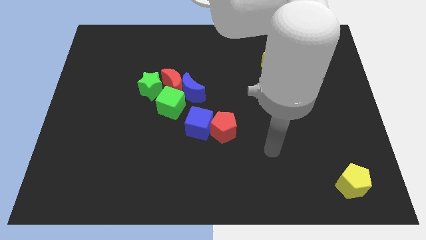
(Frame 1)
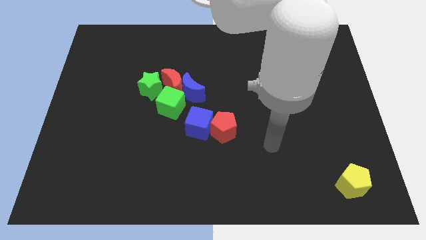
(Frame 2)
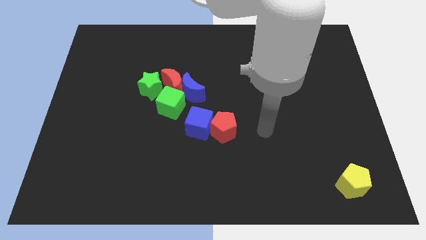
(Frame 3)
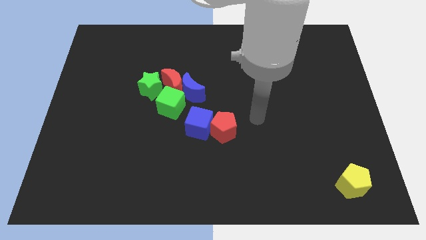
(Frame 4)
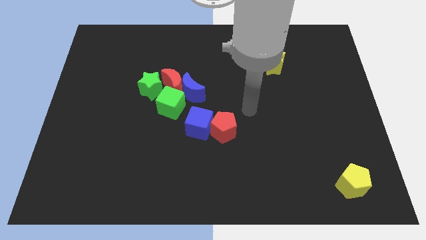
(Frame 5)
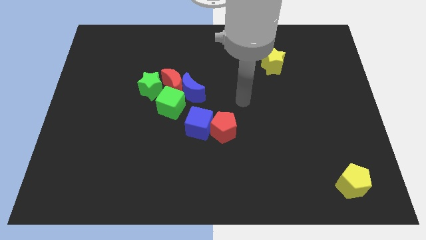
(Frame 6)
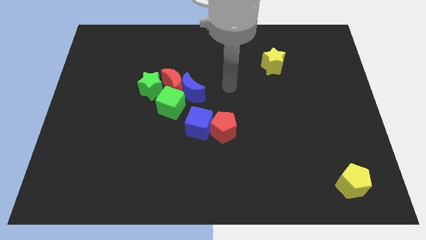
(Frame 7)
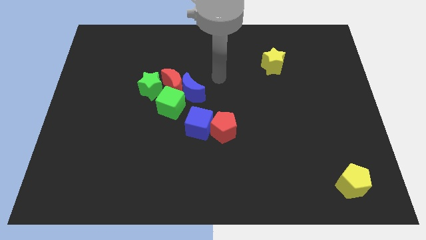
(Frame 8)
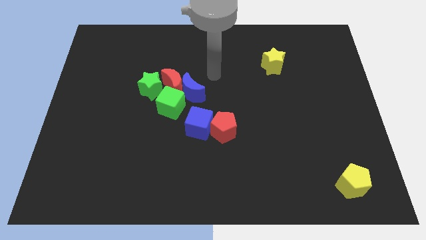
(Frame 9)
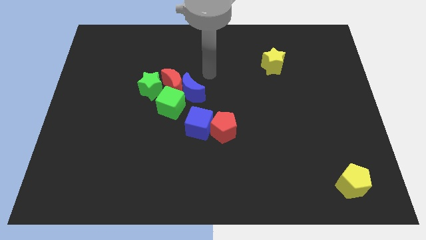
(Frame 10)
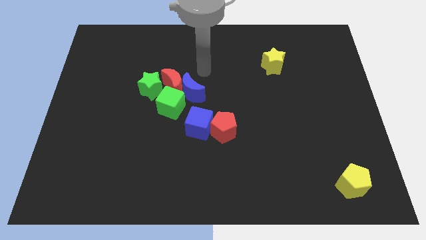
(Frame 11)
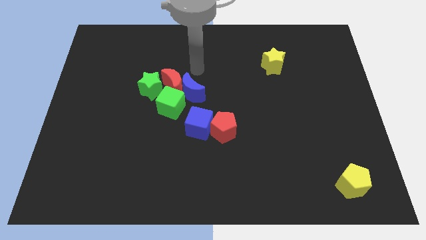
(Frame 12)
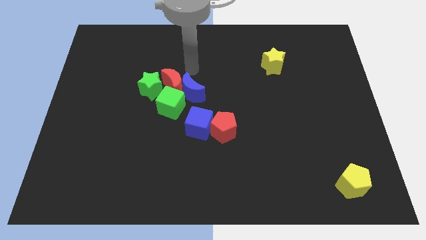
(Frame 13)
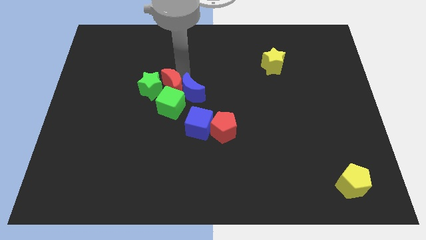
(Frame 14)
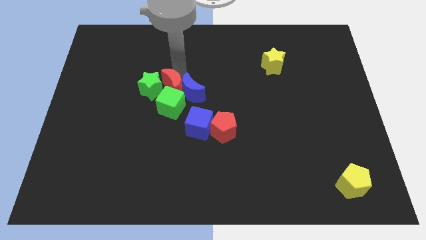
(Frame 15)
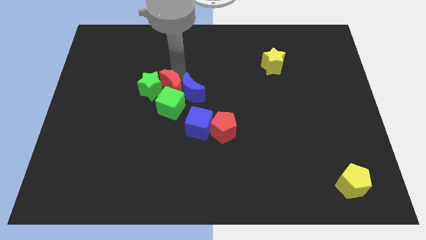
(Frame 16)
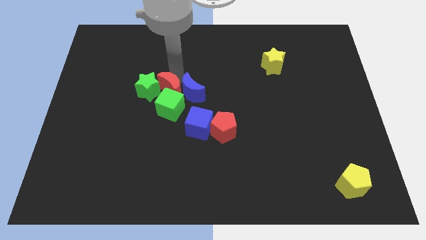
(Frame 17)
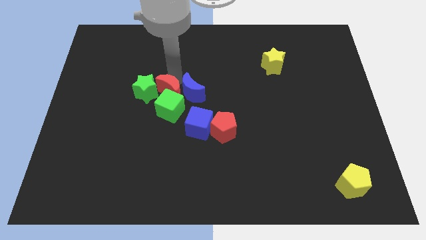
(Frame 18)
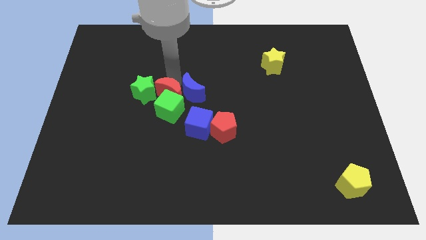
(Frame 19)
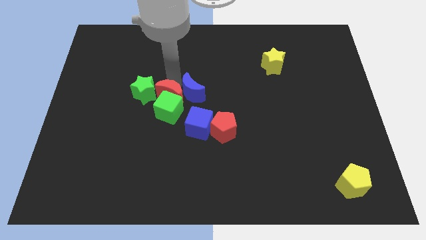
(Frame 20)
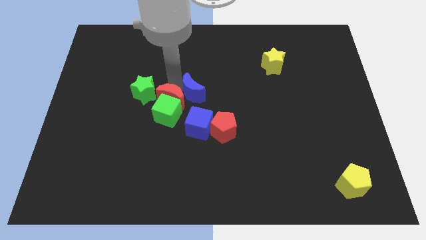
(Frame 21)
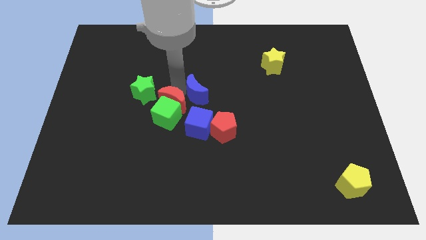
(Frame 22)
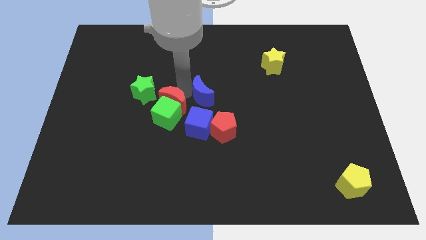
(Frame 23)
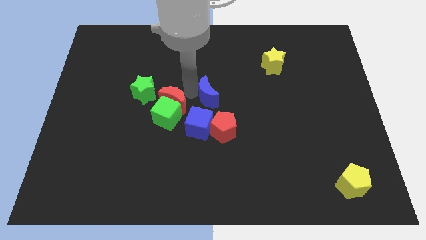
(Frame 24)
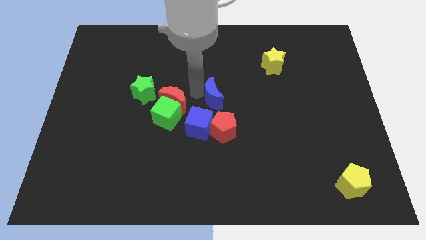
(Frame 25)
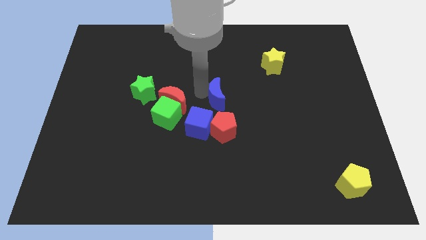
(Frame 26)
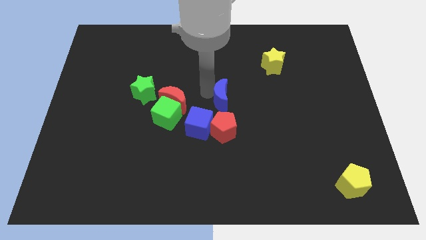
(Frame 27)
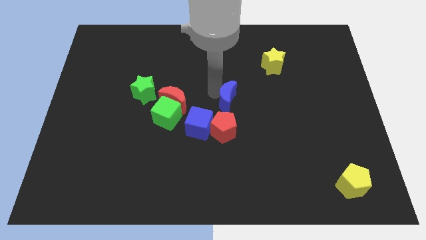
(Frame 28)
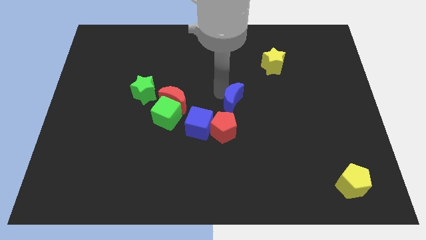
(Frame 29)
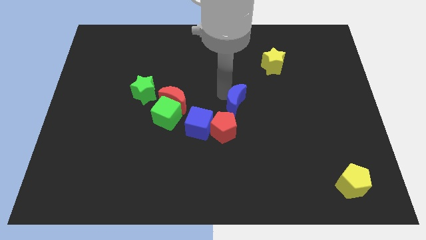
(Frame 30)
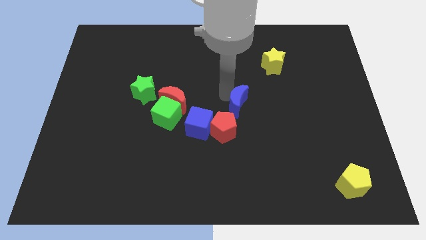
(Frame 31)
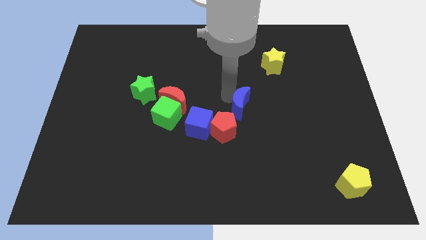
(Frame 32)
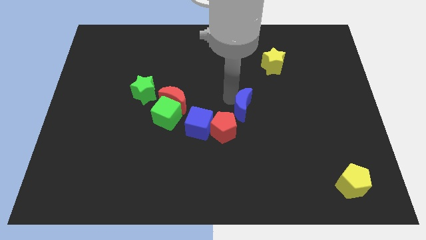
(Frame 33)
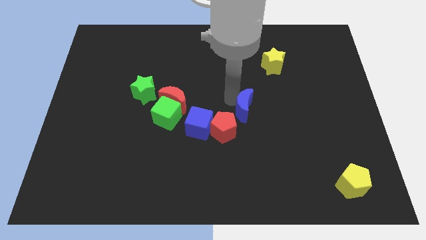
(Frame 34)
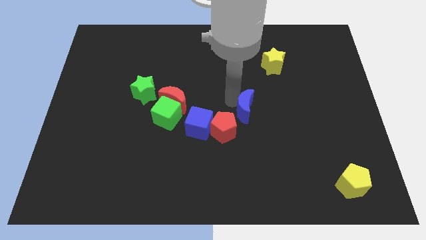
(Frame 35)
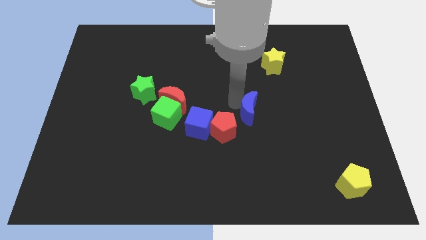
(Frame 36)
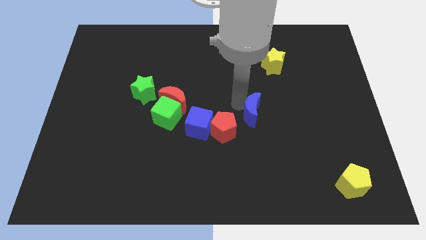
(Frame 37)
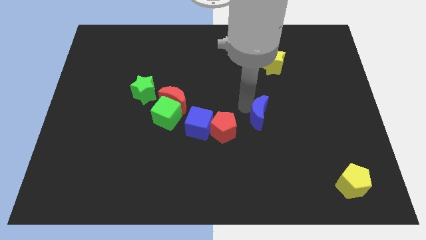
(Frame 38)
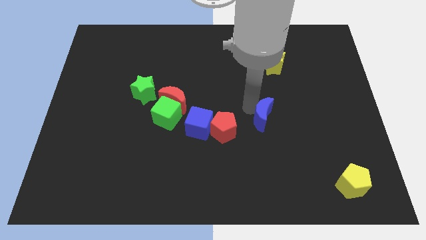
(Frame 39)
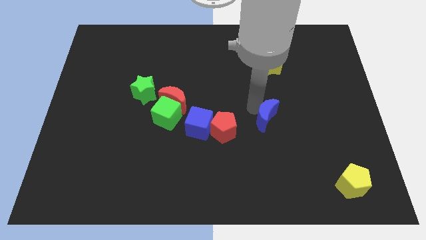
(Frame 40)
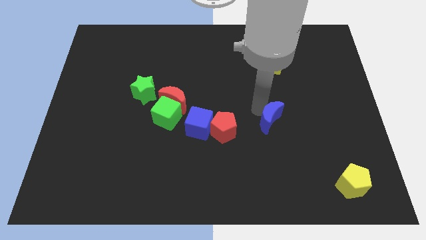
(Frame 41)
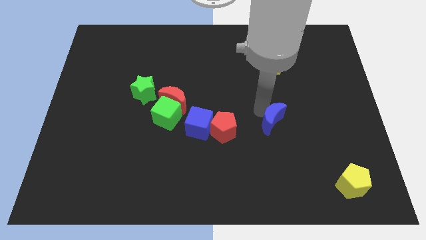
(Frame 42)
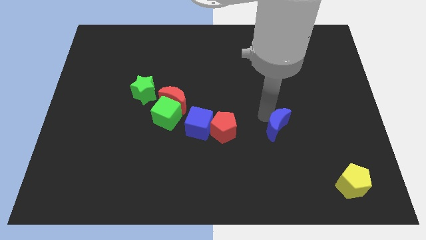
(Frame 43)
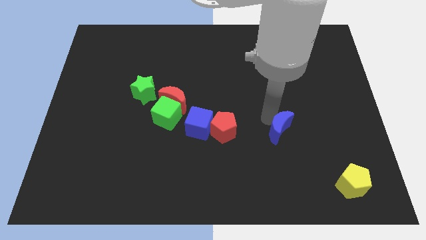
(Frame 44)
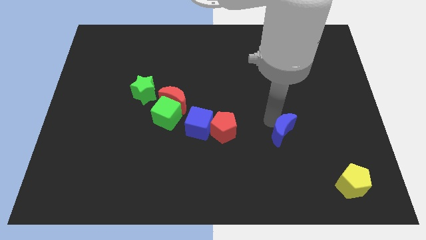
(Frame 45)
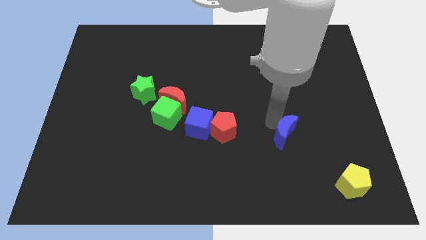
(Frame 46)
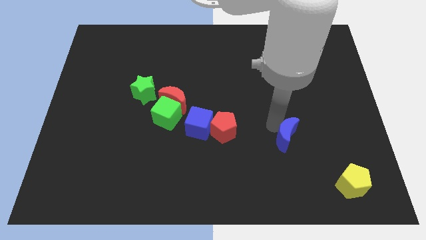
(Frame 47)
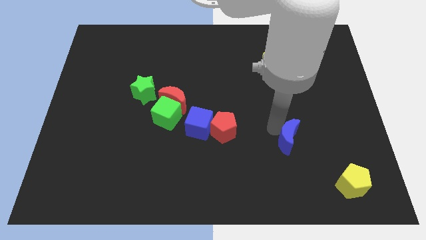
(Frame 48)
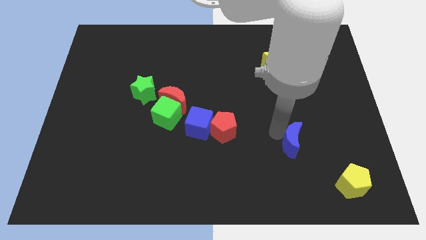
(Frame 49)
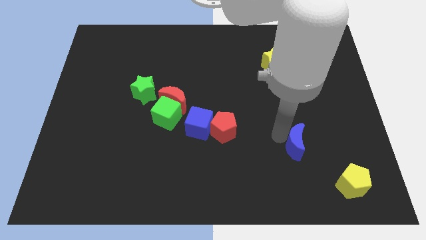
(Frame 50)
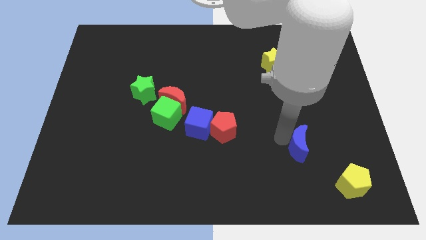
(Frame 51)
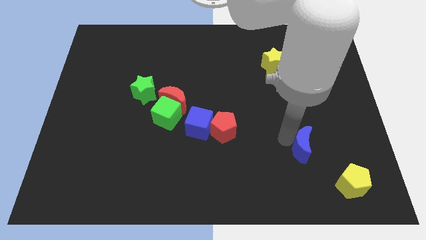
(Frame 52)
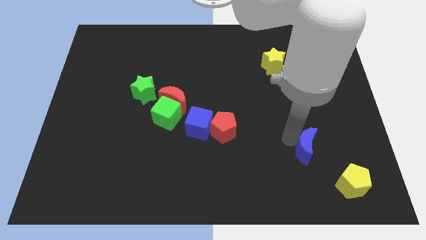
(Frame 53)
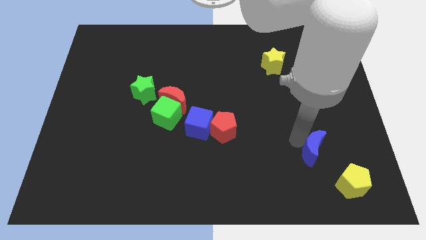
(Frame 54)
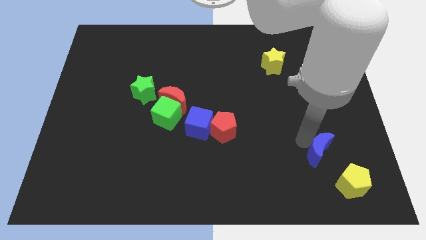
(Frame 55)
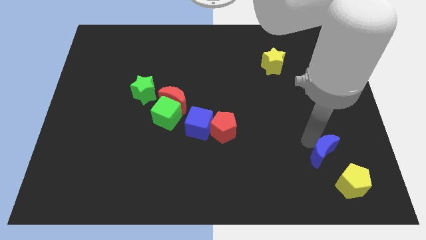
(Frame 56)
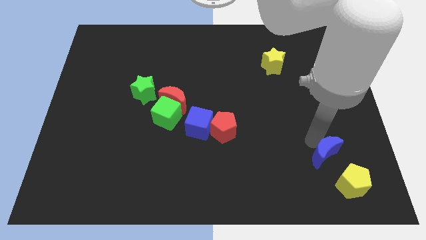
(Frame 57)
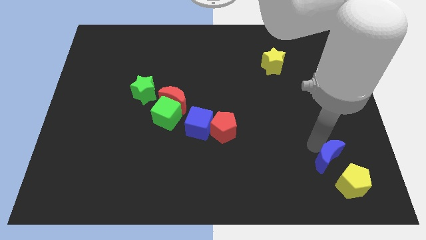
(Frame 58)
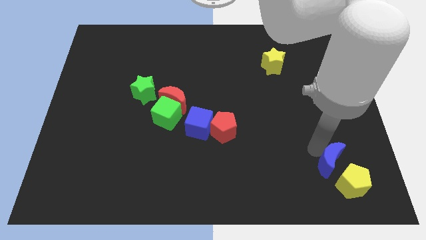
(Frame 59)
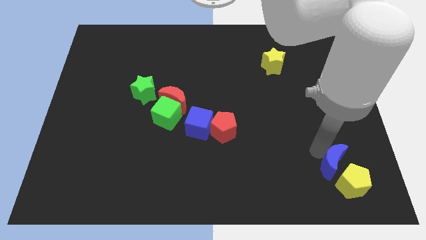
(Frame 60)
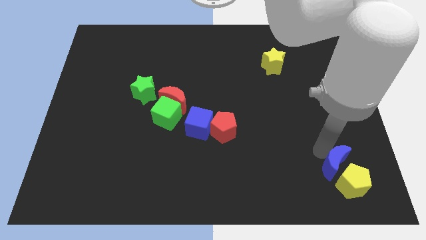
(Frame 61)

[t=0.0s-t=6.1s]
push the blue moon to the yellow pentagon

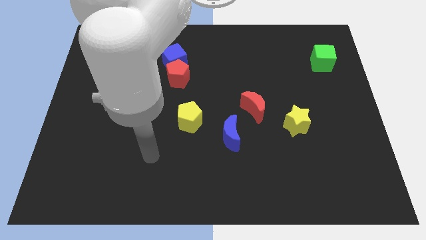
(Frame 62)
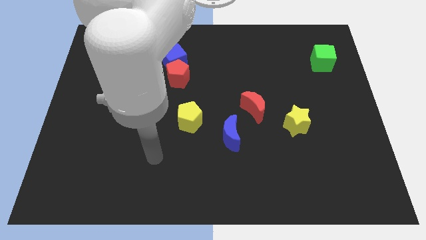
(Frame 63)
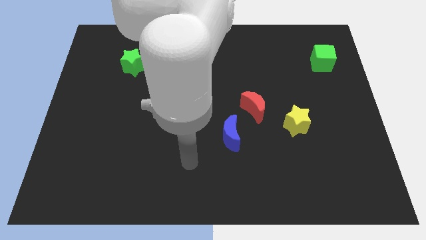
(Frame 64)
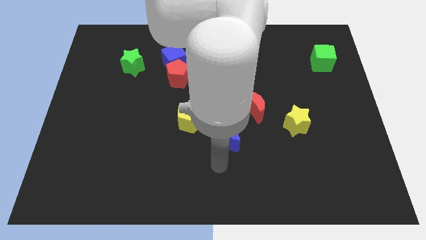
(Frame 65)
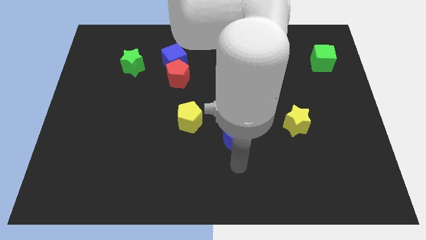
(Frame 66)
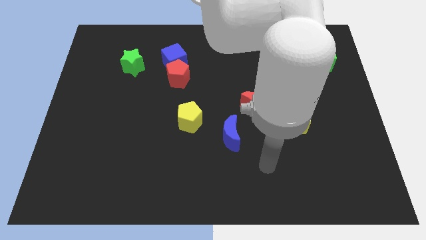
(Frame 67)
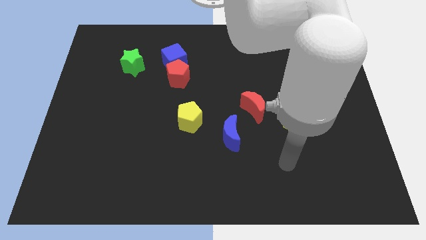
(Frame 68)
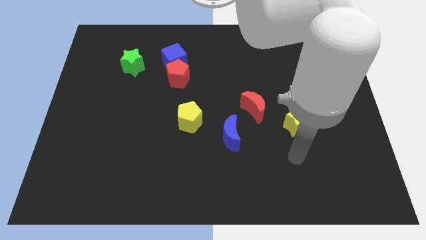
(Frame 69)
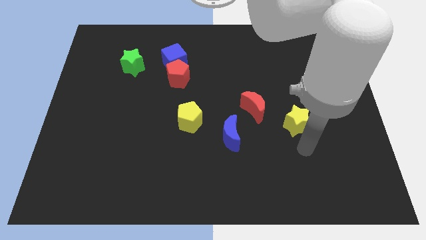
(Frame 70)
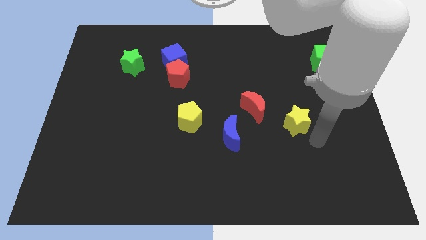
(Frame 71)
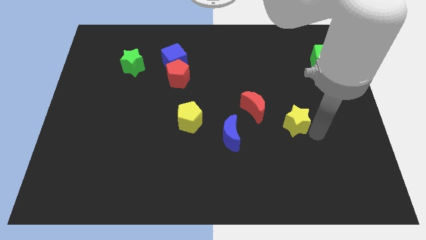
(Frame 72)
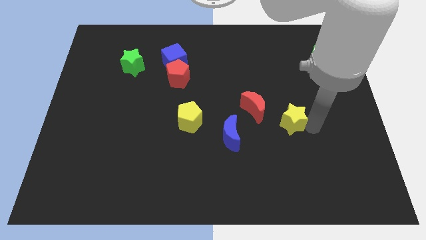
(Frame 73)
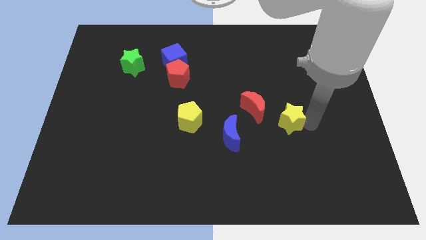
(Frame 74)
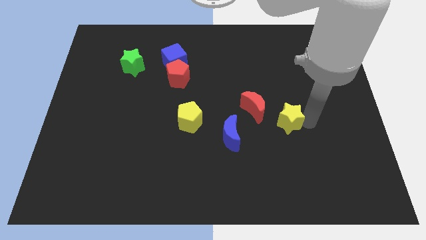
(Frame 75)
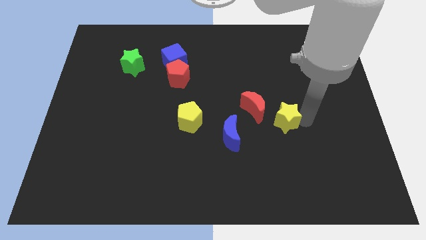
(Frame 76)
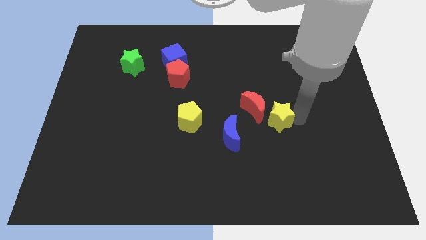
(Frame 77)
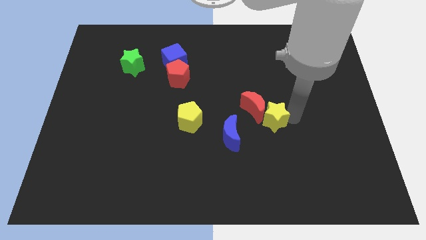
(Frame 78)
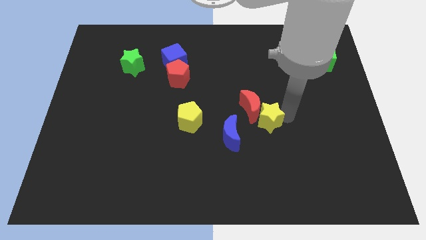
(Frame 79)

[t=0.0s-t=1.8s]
move the yellow star next to the red moon

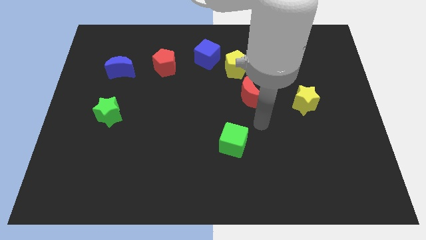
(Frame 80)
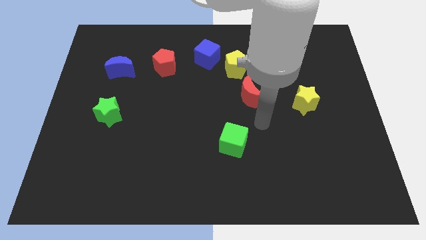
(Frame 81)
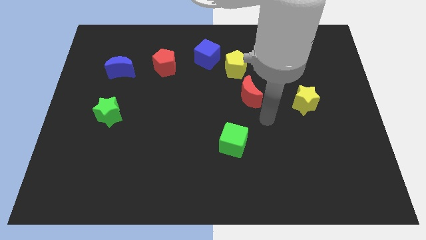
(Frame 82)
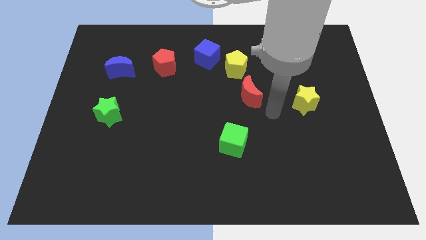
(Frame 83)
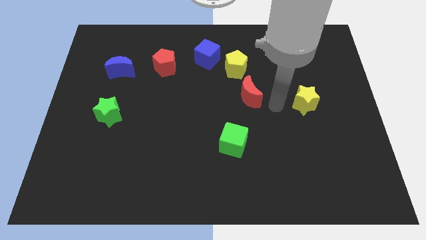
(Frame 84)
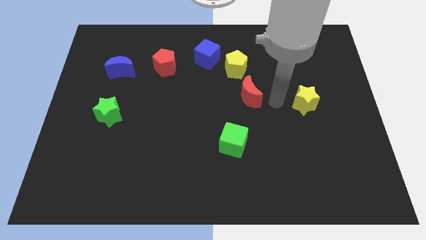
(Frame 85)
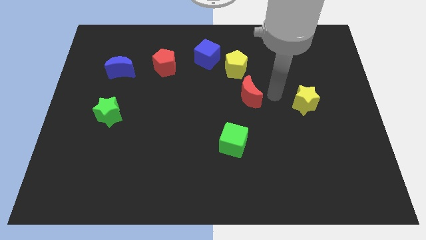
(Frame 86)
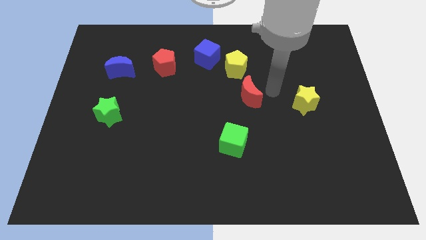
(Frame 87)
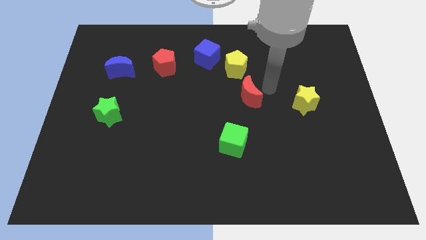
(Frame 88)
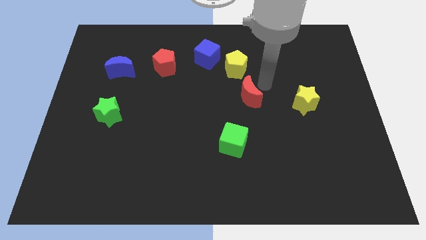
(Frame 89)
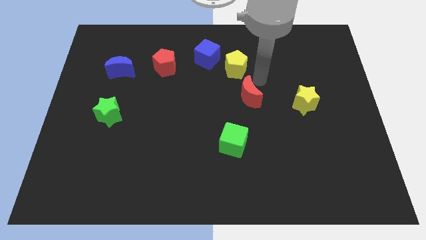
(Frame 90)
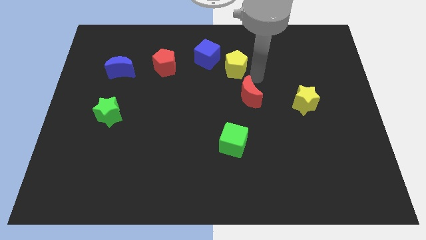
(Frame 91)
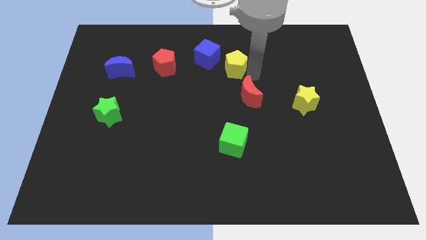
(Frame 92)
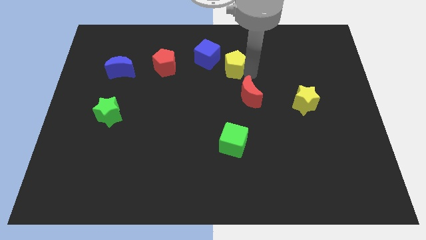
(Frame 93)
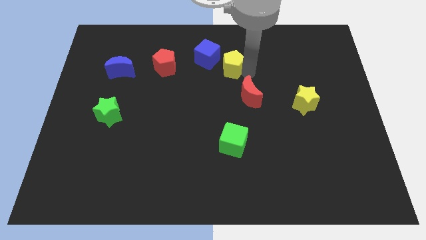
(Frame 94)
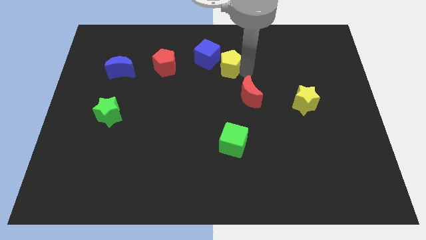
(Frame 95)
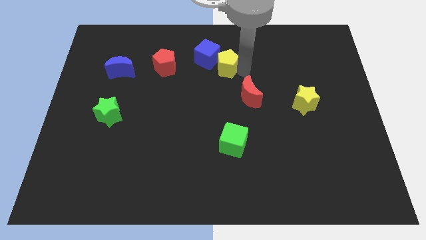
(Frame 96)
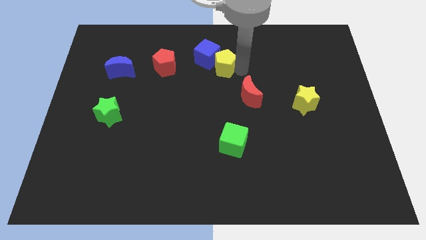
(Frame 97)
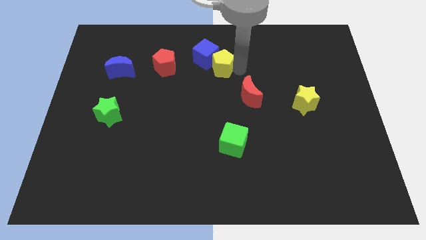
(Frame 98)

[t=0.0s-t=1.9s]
push the yellow pentagon to the blue cube
